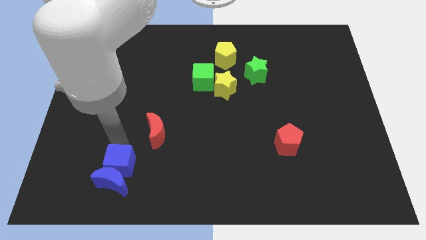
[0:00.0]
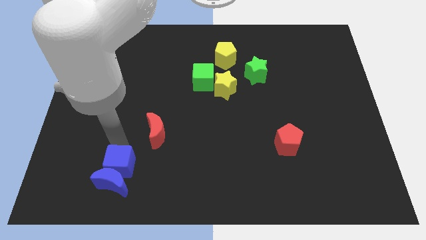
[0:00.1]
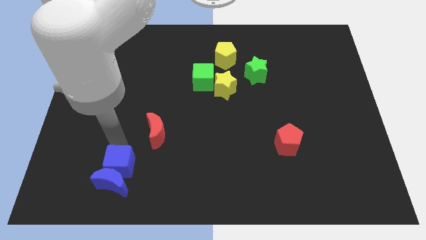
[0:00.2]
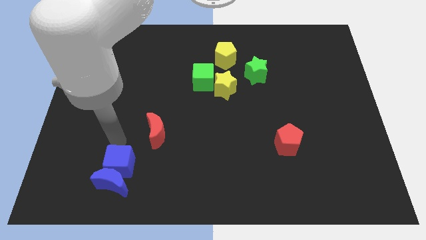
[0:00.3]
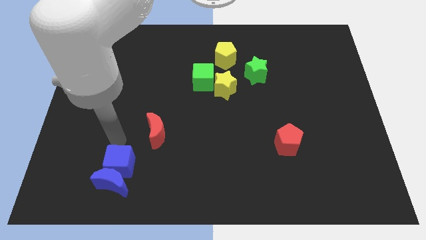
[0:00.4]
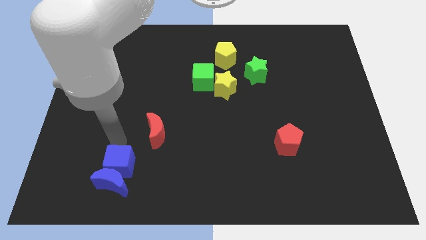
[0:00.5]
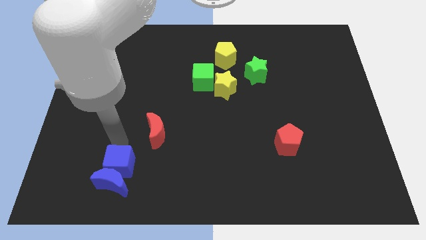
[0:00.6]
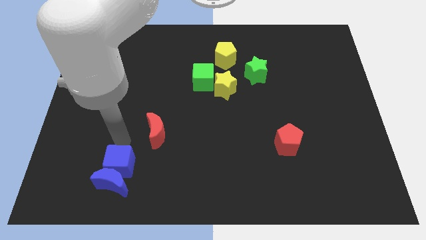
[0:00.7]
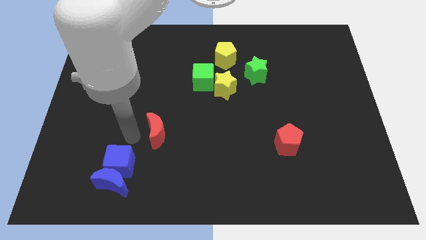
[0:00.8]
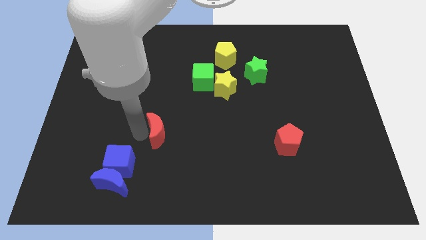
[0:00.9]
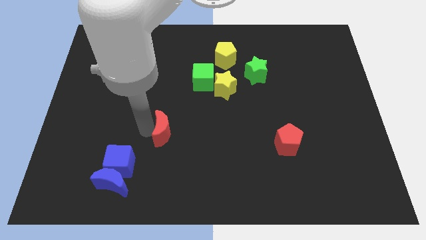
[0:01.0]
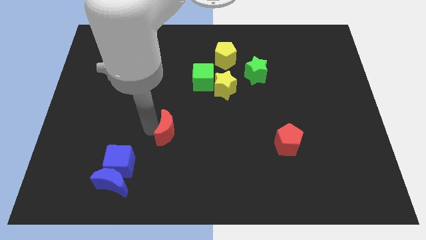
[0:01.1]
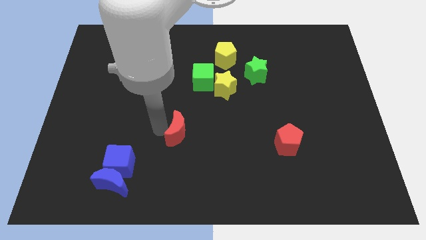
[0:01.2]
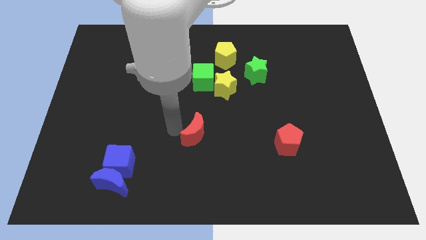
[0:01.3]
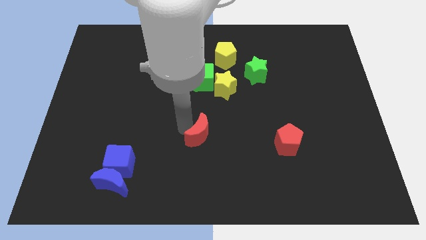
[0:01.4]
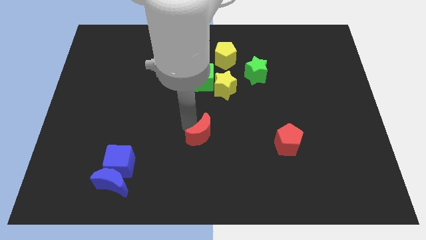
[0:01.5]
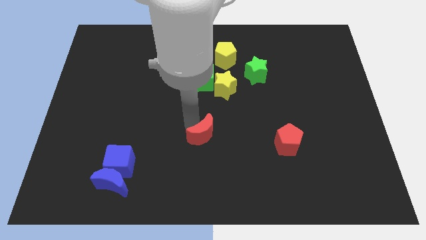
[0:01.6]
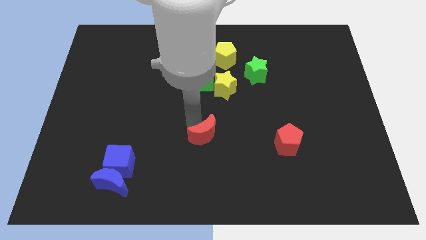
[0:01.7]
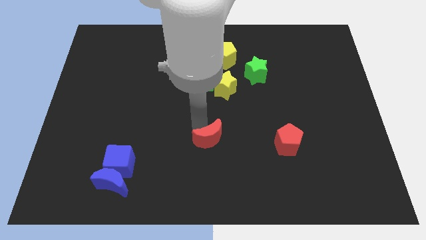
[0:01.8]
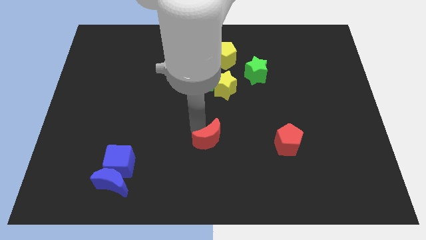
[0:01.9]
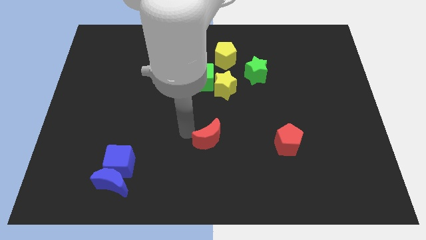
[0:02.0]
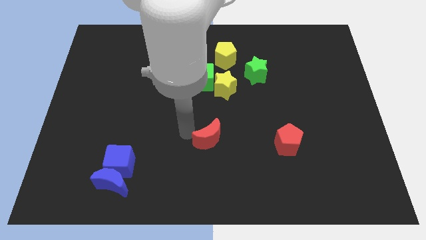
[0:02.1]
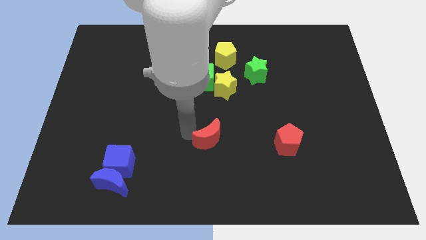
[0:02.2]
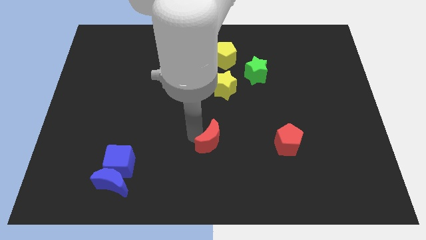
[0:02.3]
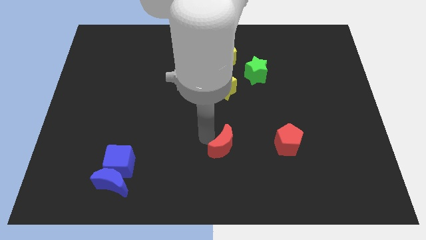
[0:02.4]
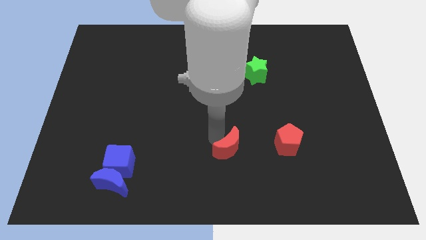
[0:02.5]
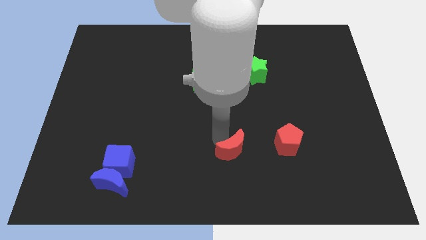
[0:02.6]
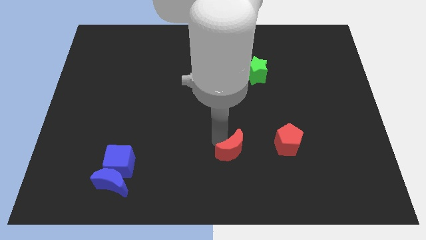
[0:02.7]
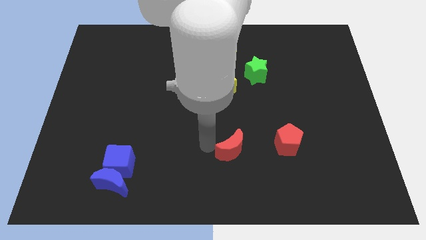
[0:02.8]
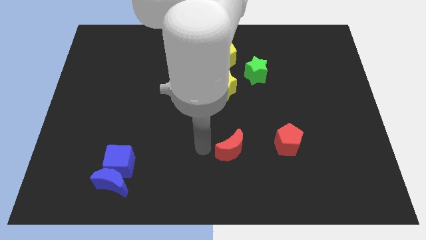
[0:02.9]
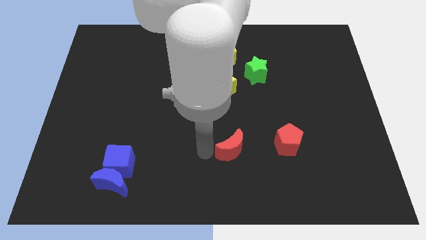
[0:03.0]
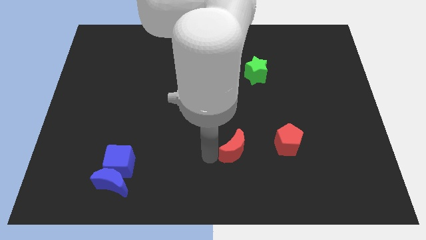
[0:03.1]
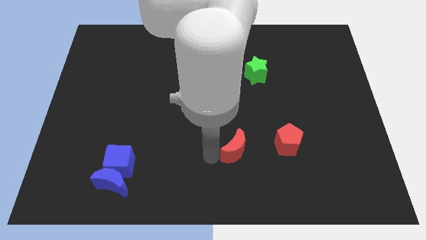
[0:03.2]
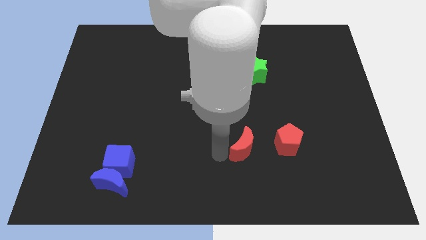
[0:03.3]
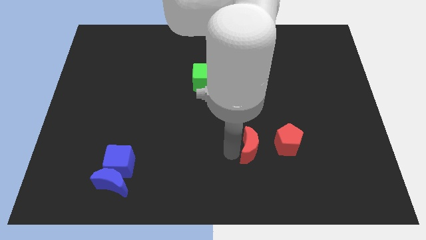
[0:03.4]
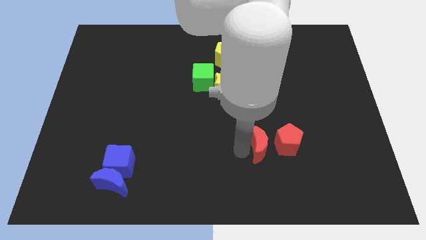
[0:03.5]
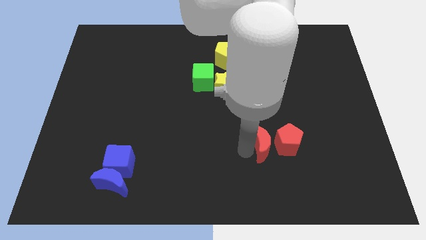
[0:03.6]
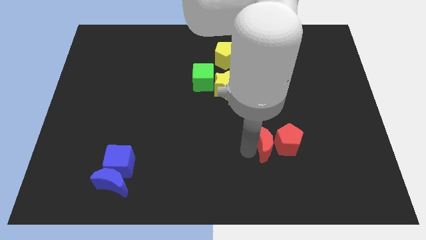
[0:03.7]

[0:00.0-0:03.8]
place the red moon to the left of the red pentagon

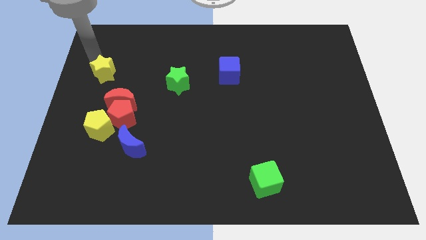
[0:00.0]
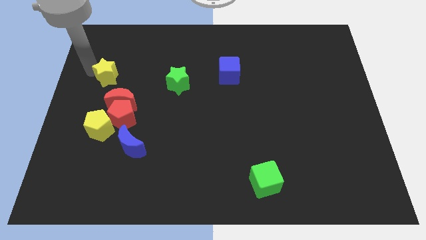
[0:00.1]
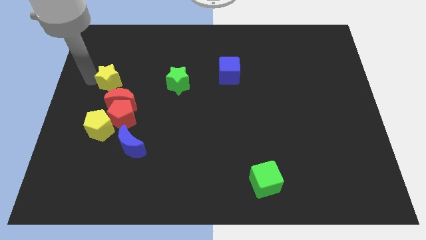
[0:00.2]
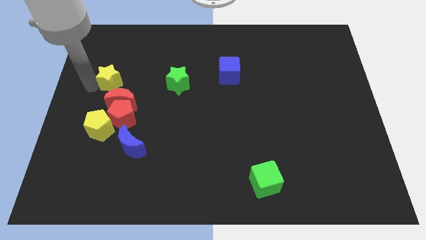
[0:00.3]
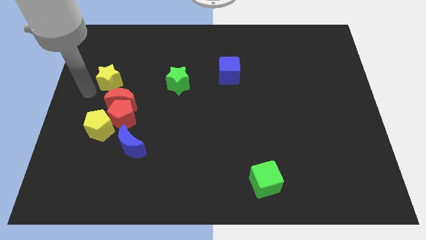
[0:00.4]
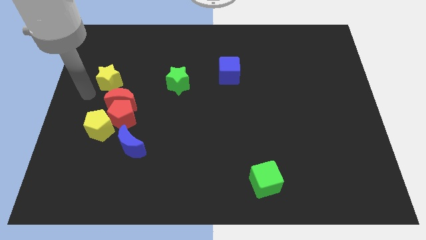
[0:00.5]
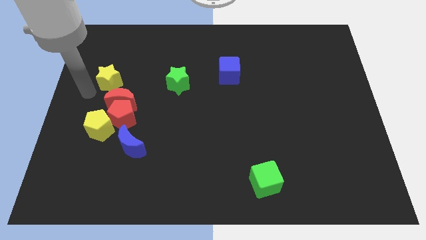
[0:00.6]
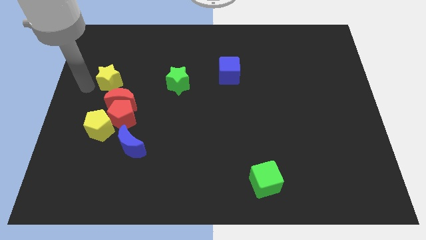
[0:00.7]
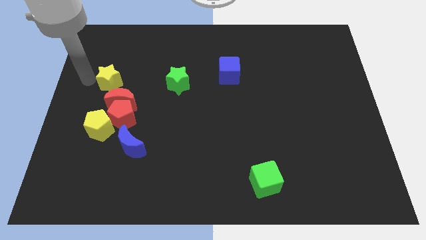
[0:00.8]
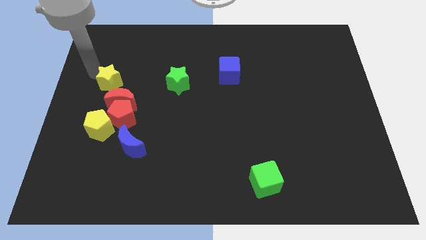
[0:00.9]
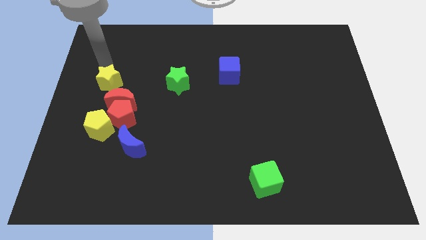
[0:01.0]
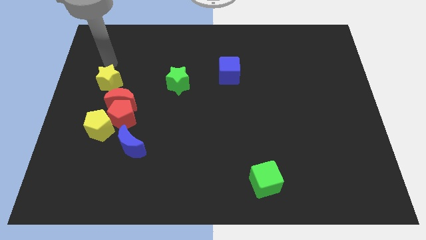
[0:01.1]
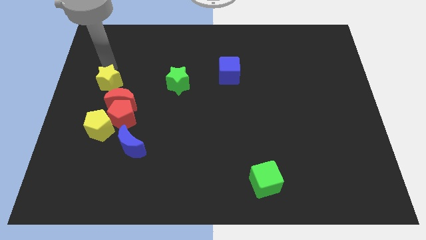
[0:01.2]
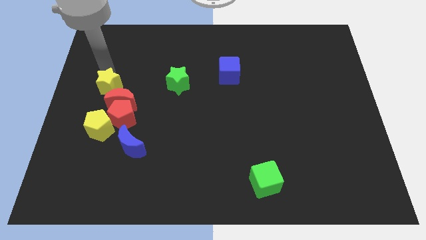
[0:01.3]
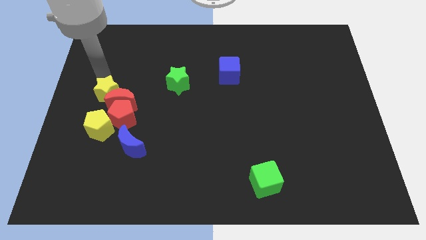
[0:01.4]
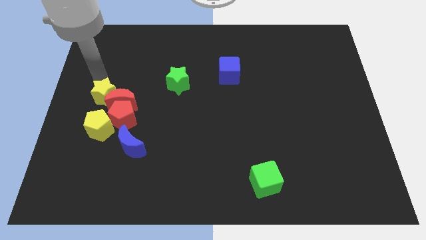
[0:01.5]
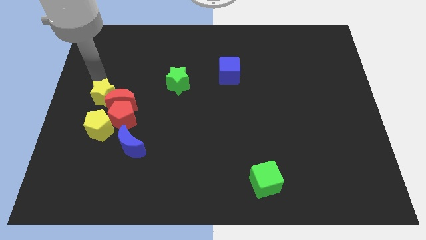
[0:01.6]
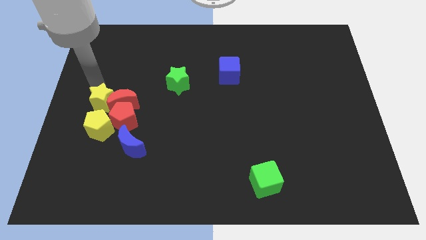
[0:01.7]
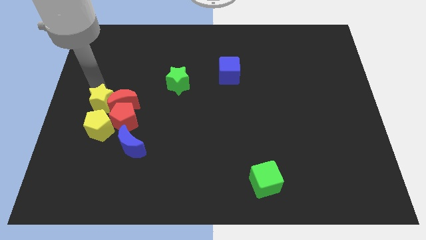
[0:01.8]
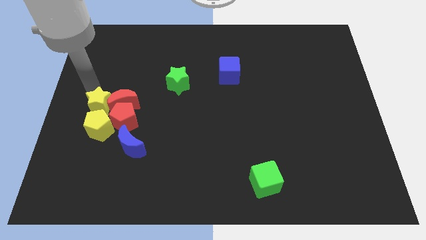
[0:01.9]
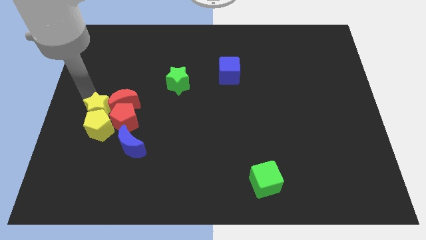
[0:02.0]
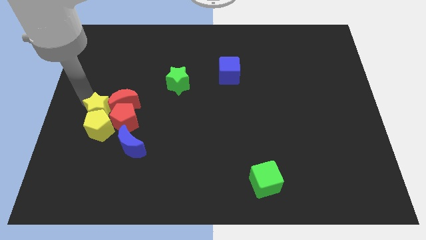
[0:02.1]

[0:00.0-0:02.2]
push the yellow star into the group of blocks

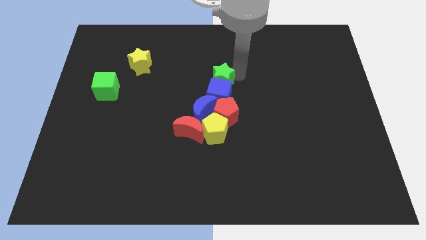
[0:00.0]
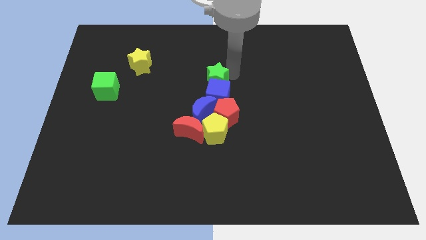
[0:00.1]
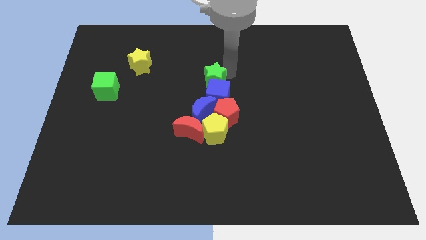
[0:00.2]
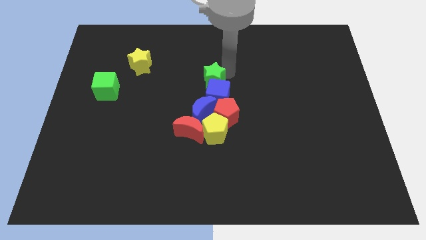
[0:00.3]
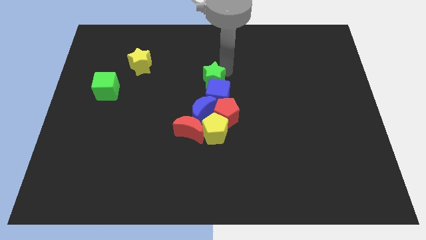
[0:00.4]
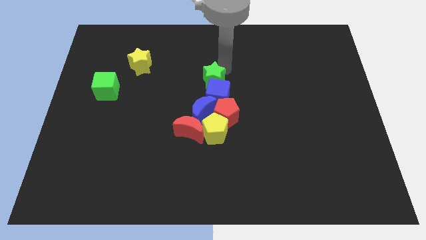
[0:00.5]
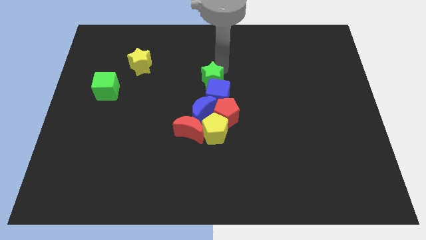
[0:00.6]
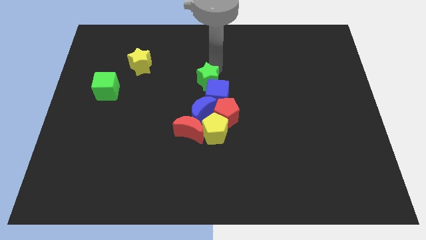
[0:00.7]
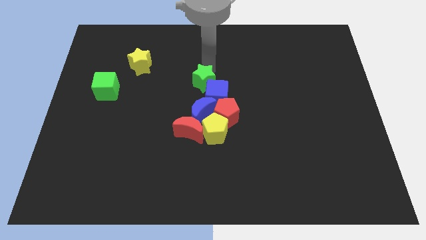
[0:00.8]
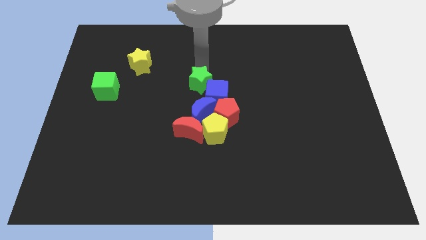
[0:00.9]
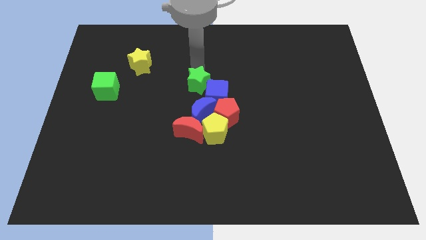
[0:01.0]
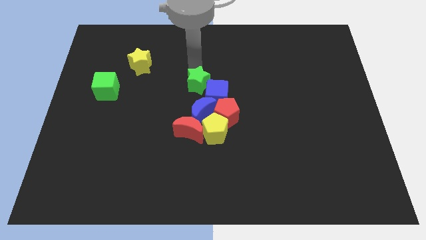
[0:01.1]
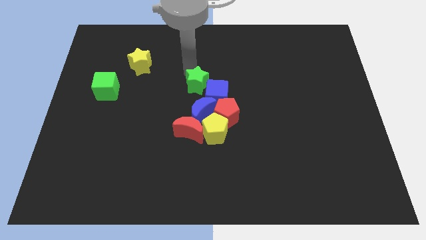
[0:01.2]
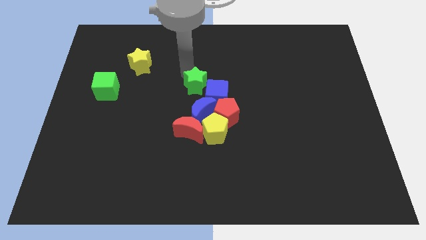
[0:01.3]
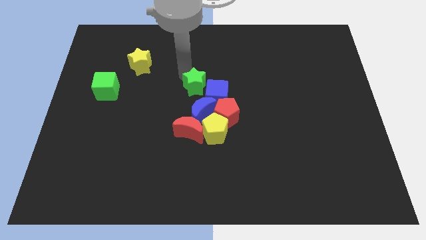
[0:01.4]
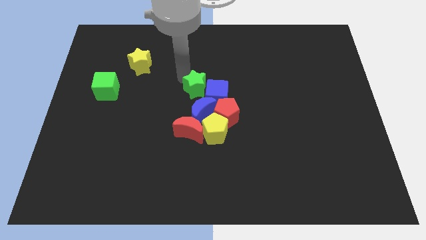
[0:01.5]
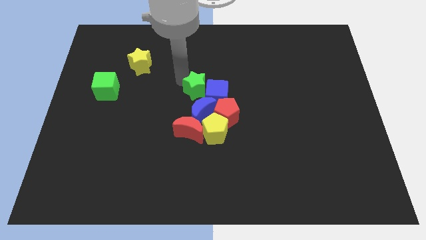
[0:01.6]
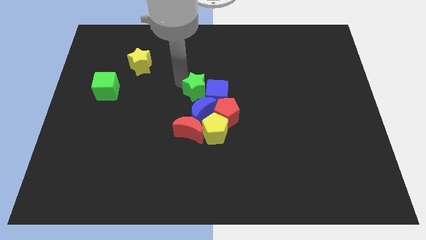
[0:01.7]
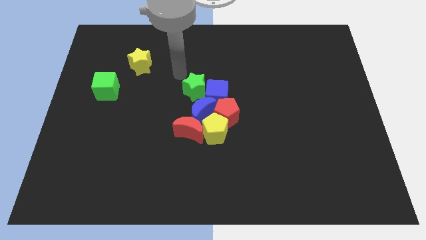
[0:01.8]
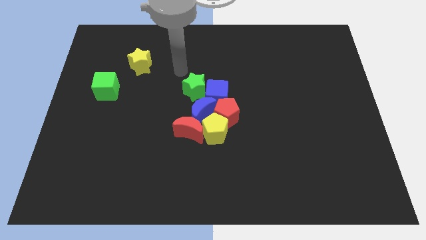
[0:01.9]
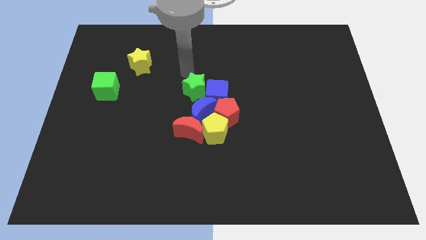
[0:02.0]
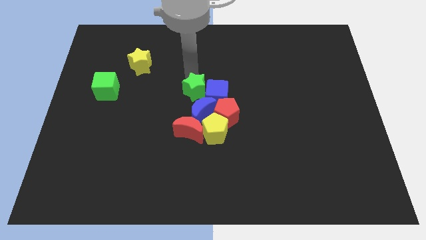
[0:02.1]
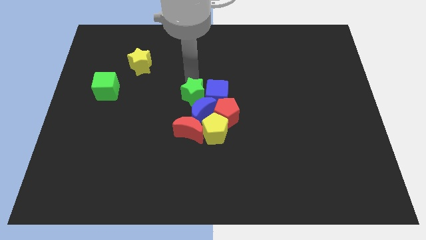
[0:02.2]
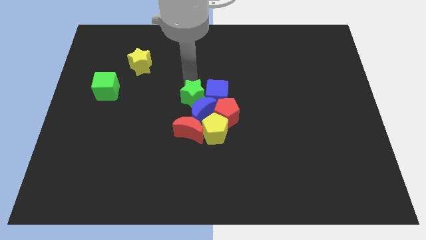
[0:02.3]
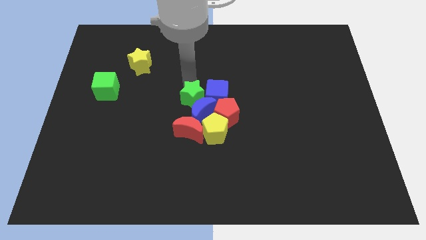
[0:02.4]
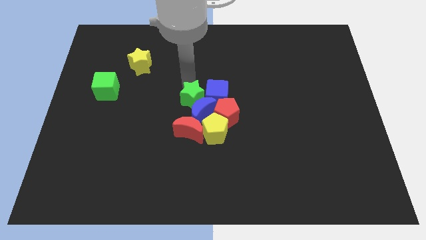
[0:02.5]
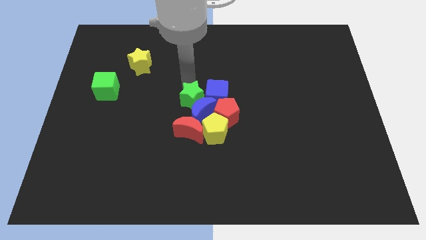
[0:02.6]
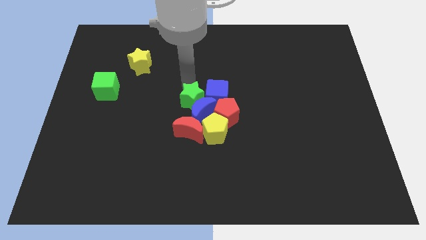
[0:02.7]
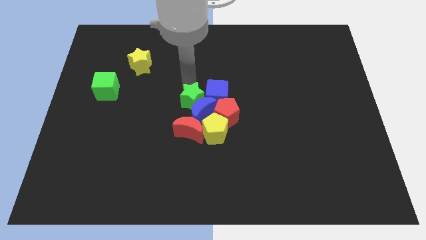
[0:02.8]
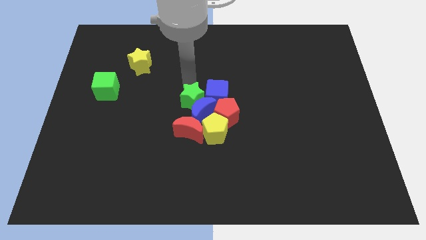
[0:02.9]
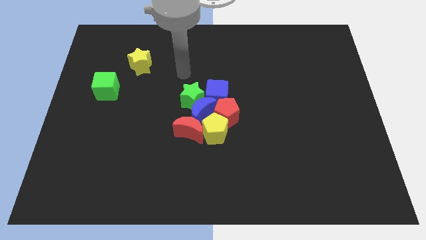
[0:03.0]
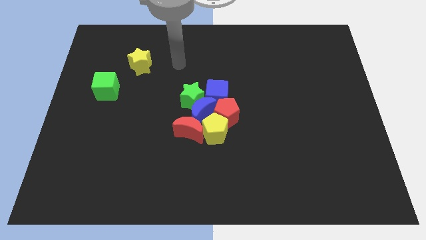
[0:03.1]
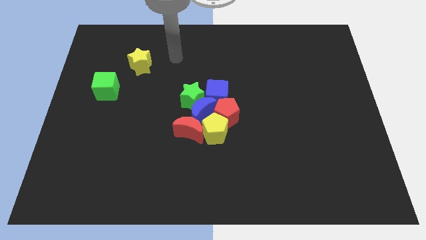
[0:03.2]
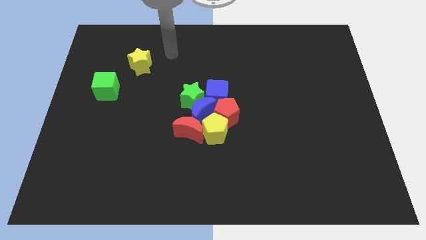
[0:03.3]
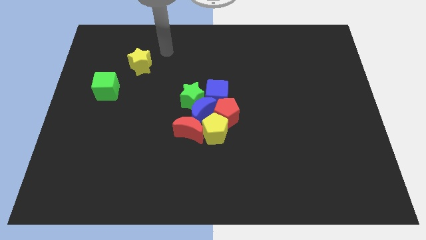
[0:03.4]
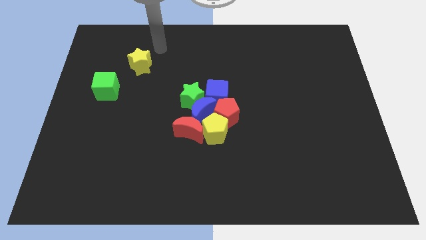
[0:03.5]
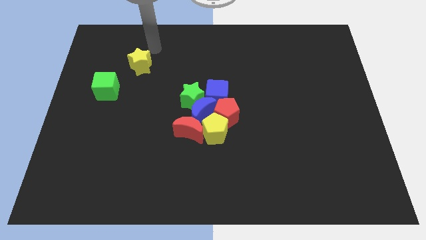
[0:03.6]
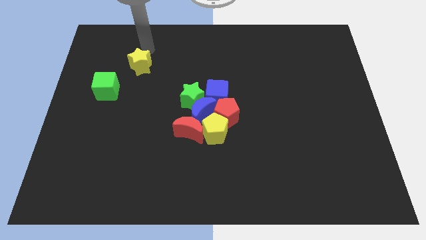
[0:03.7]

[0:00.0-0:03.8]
move green star left beside the blue cube
